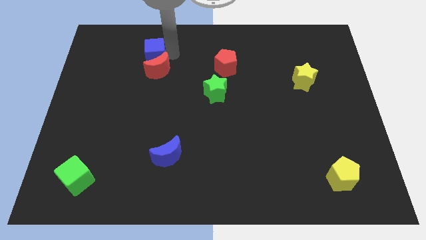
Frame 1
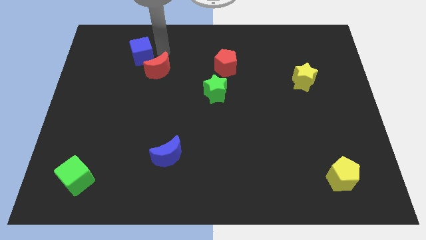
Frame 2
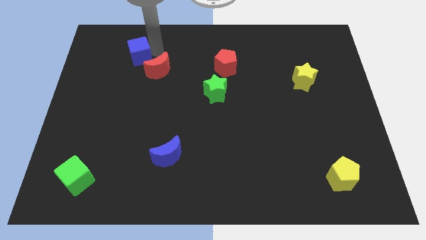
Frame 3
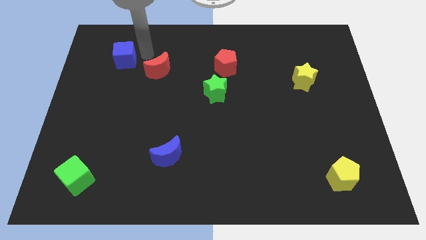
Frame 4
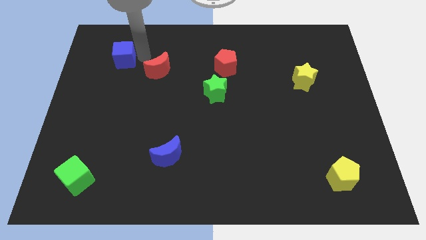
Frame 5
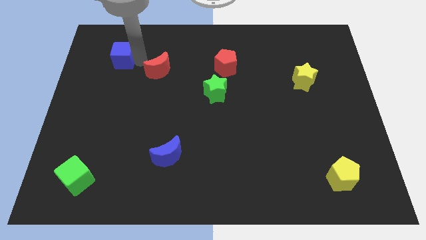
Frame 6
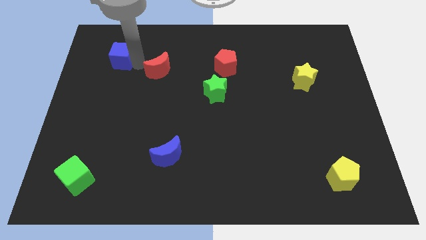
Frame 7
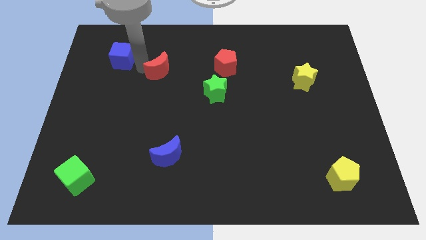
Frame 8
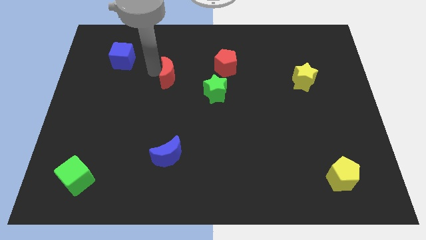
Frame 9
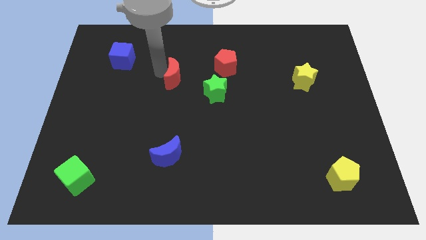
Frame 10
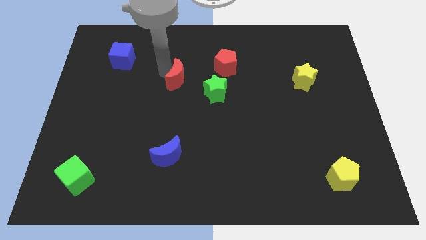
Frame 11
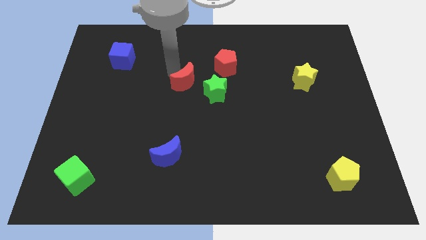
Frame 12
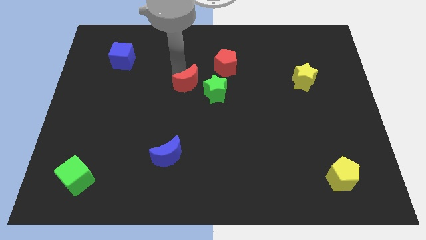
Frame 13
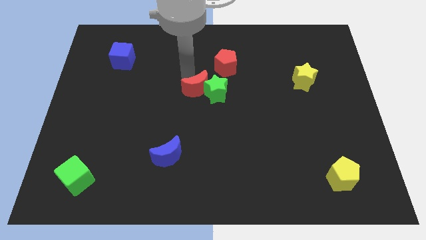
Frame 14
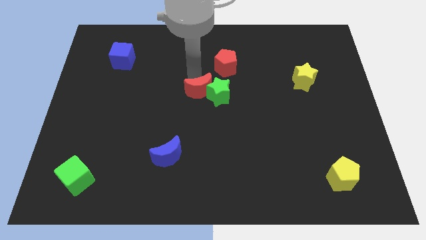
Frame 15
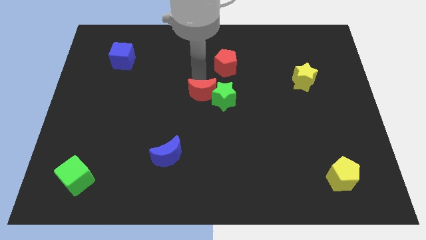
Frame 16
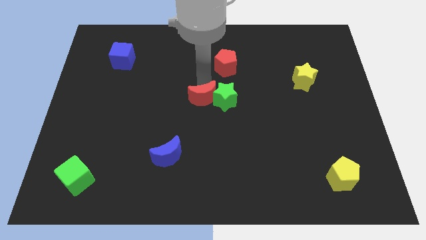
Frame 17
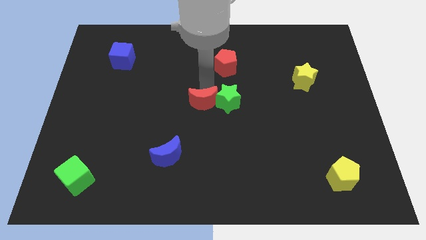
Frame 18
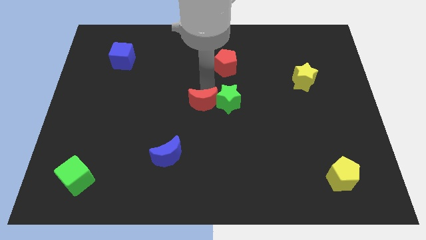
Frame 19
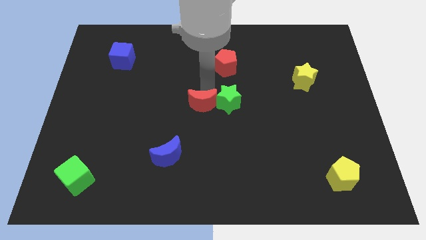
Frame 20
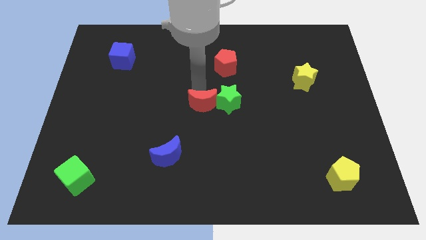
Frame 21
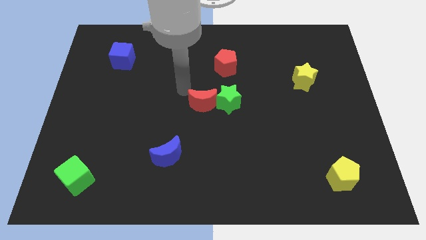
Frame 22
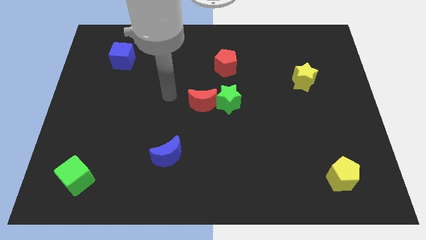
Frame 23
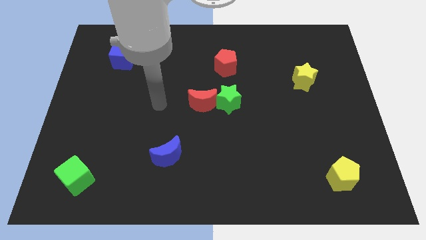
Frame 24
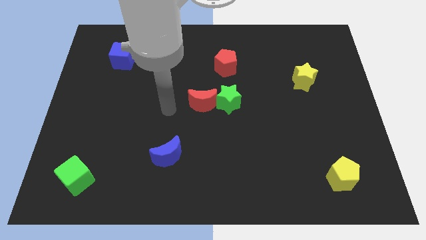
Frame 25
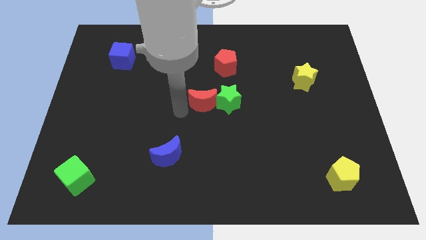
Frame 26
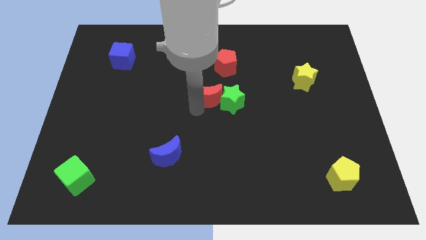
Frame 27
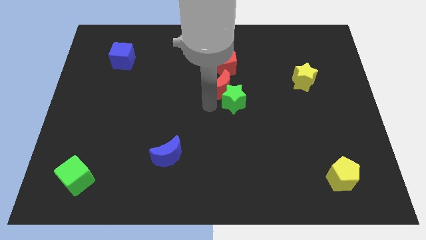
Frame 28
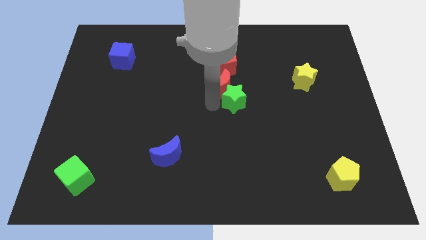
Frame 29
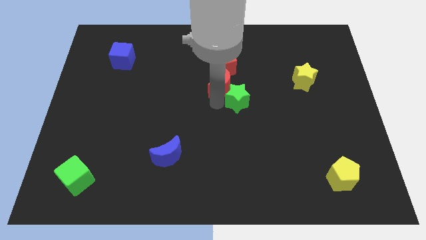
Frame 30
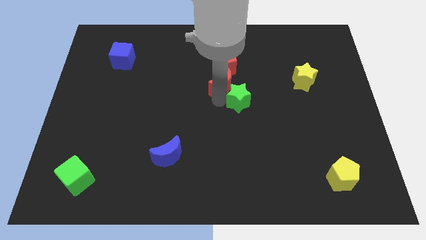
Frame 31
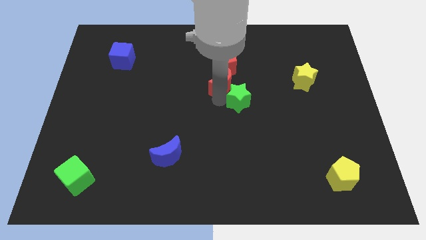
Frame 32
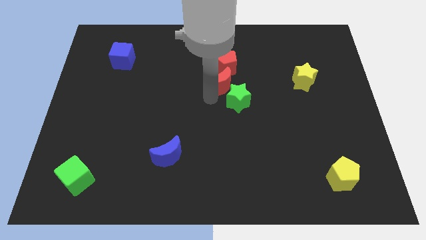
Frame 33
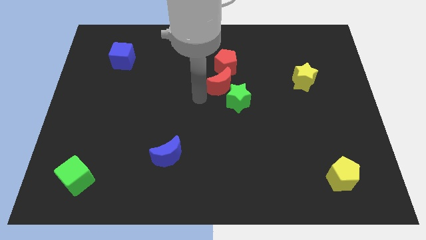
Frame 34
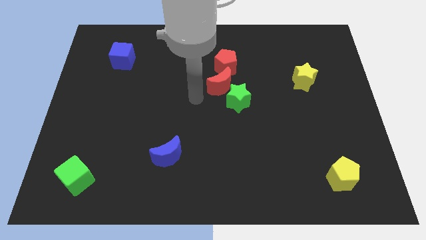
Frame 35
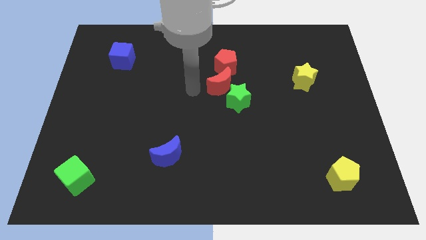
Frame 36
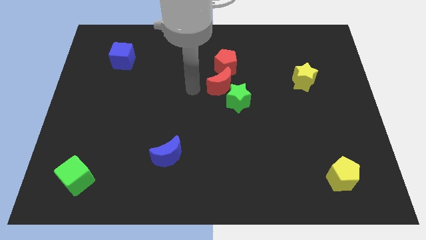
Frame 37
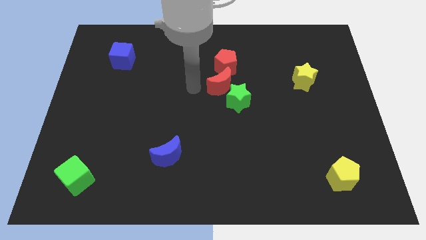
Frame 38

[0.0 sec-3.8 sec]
place the red crescent below the red pentagon

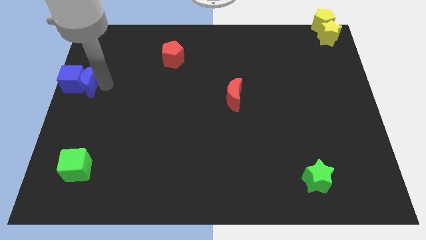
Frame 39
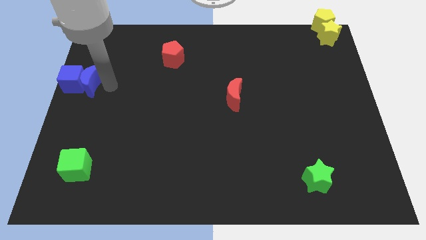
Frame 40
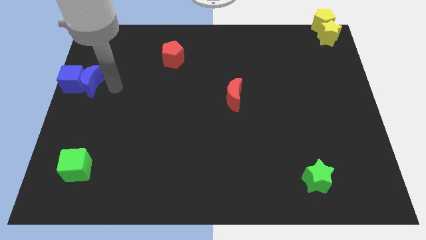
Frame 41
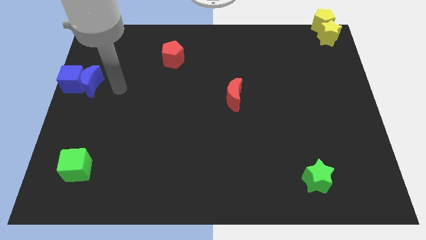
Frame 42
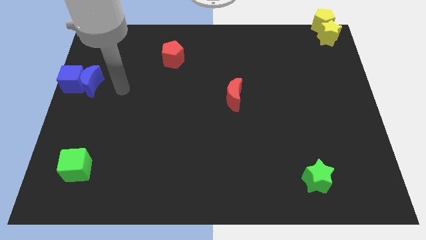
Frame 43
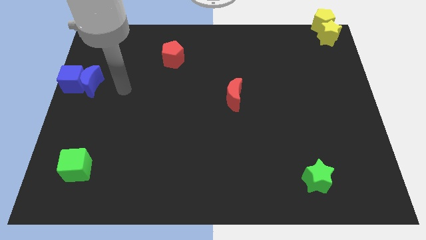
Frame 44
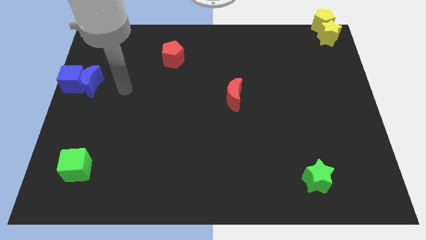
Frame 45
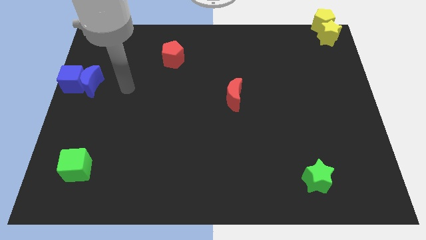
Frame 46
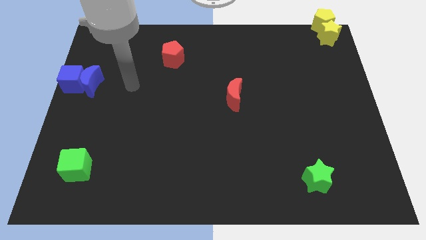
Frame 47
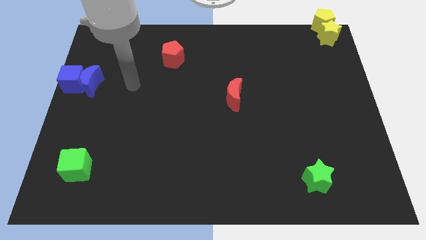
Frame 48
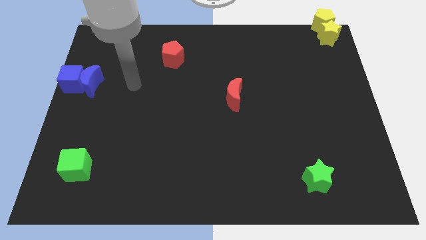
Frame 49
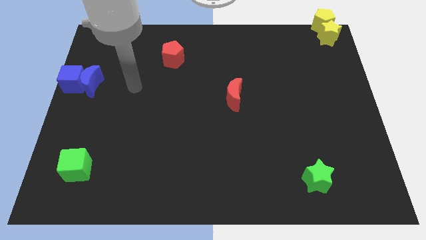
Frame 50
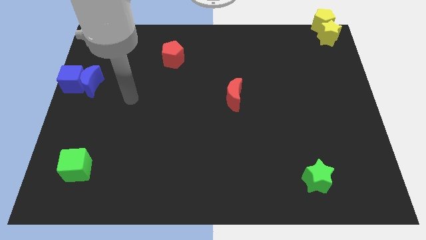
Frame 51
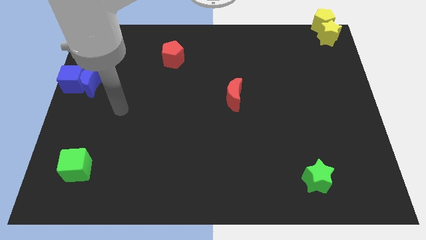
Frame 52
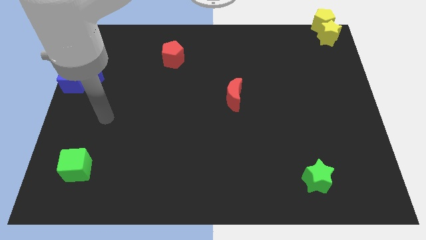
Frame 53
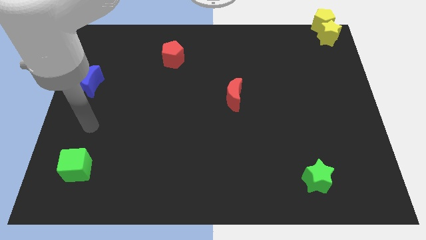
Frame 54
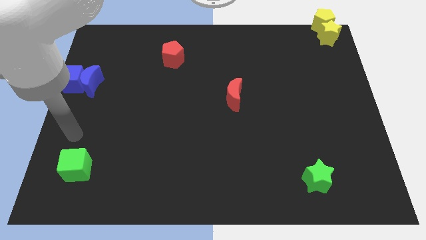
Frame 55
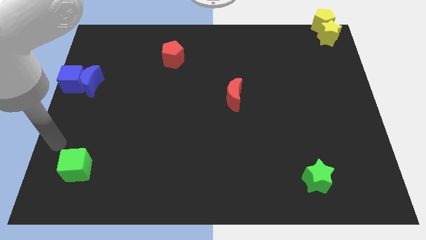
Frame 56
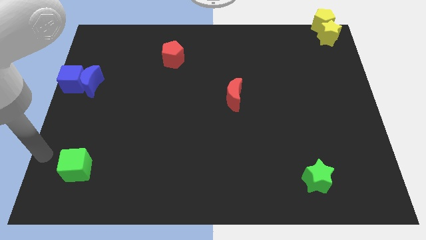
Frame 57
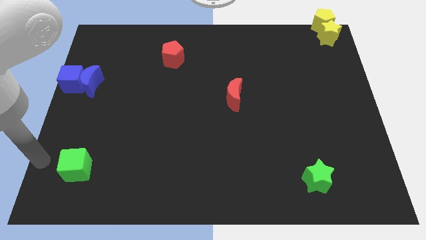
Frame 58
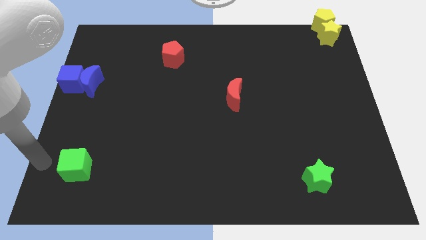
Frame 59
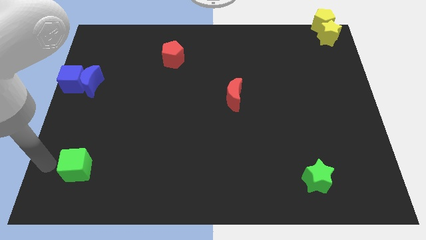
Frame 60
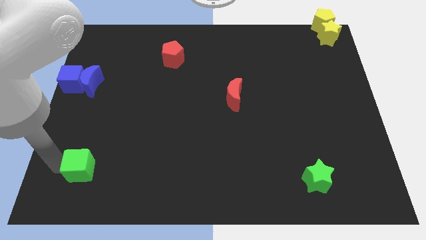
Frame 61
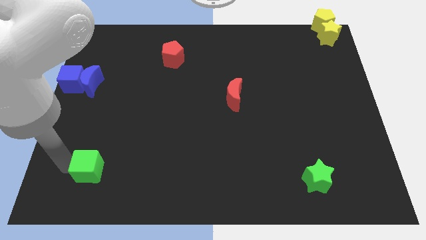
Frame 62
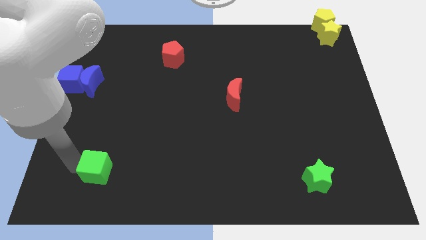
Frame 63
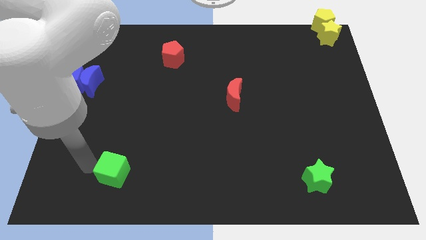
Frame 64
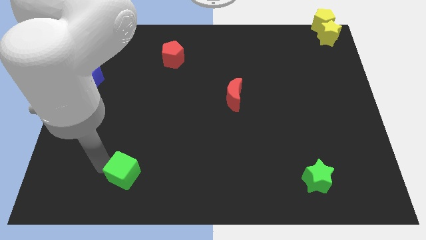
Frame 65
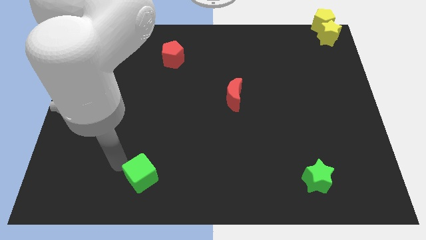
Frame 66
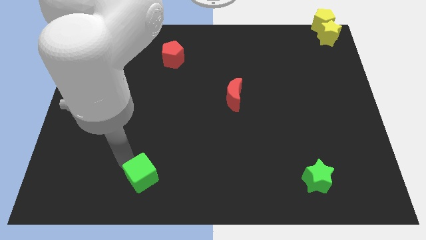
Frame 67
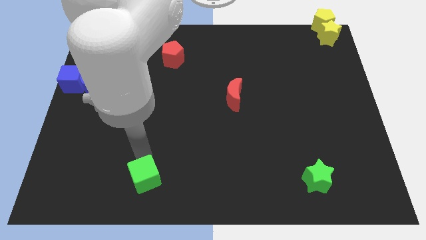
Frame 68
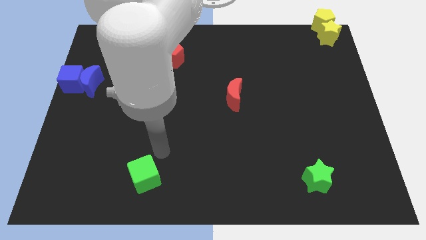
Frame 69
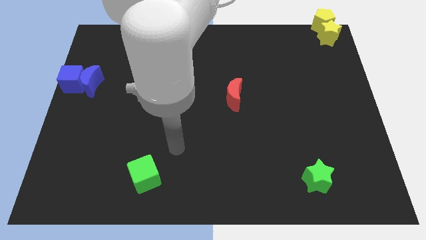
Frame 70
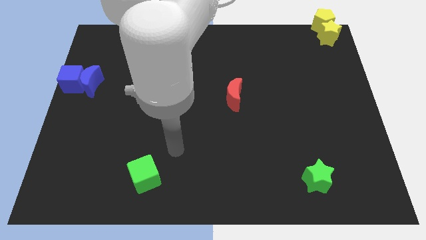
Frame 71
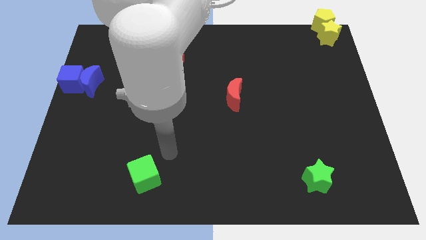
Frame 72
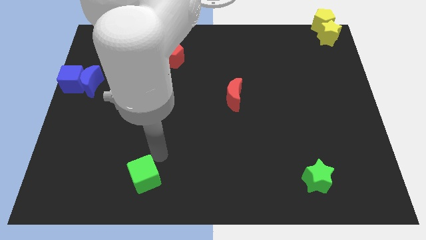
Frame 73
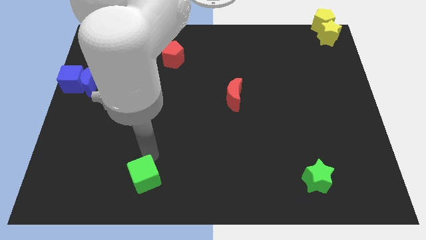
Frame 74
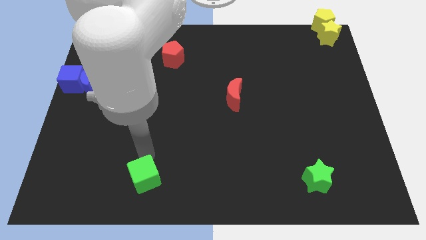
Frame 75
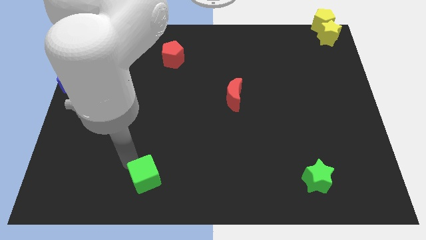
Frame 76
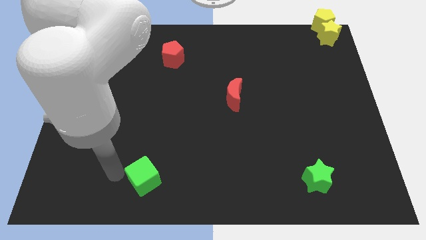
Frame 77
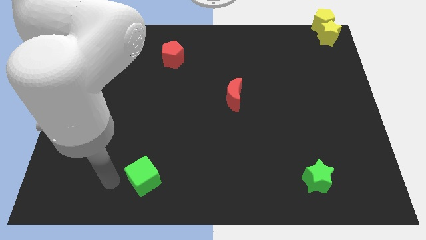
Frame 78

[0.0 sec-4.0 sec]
put the green cube in parallel with the green star

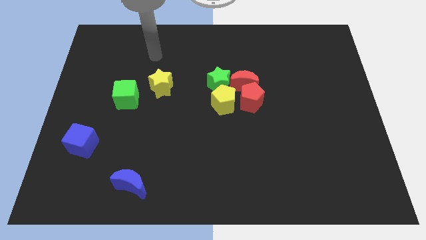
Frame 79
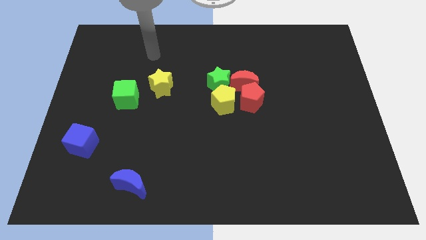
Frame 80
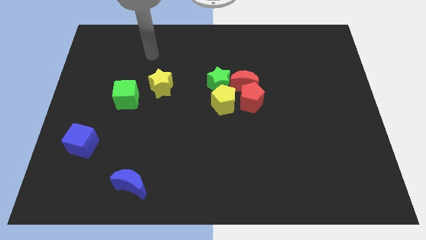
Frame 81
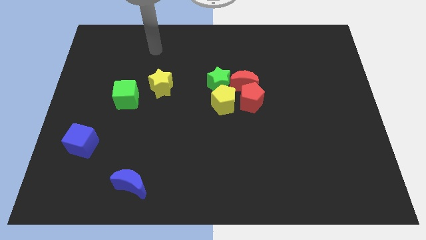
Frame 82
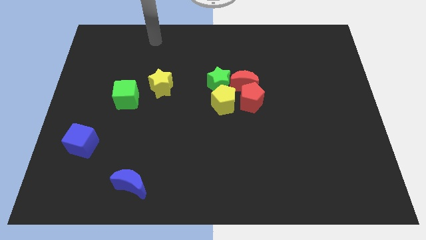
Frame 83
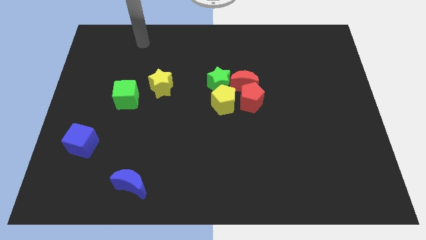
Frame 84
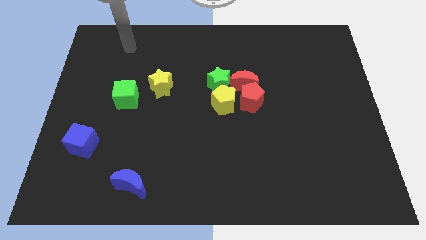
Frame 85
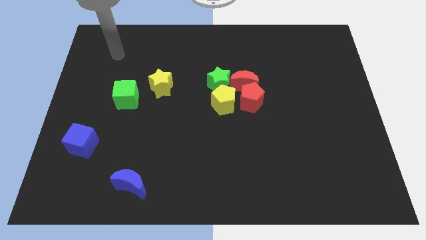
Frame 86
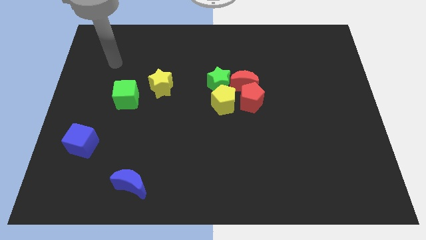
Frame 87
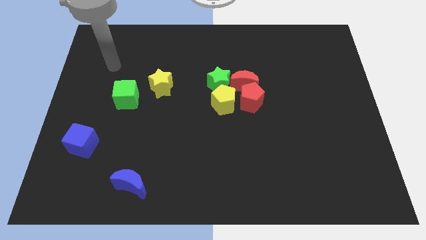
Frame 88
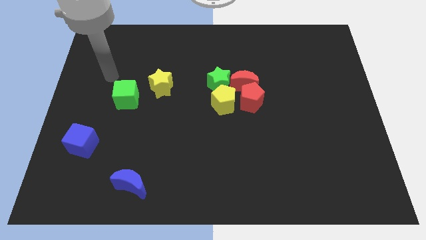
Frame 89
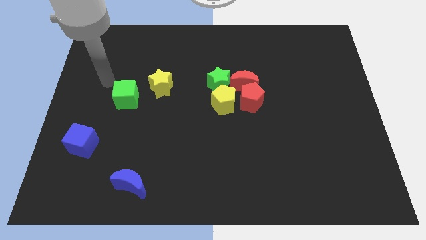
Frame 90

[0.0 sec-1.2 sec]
move your arm towards the top left of the green cube
